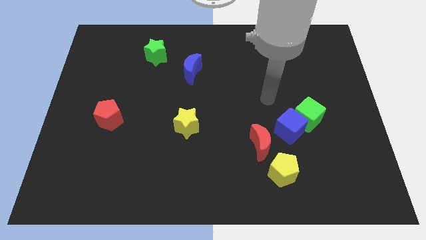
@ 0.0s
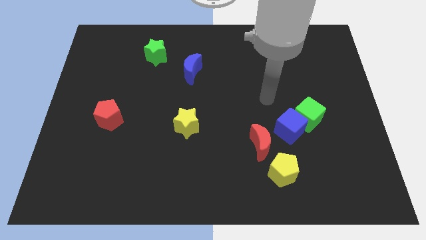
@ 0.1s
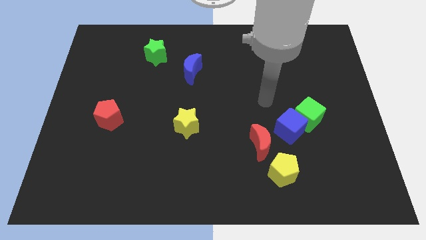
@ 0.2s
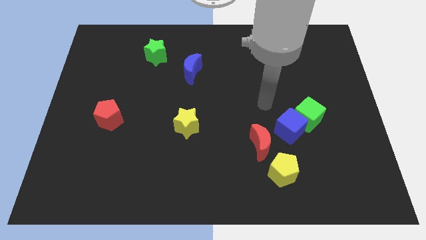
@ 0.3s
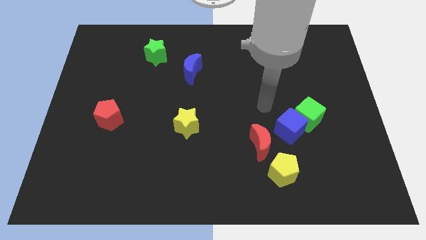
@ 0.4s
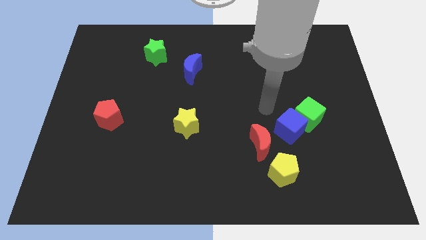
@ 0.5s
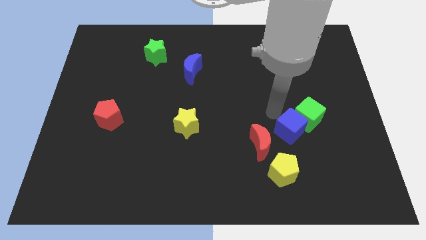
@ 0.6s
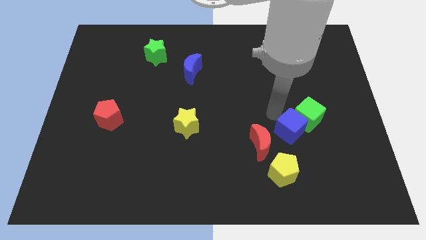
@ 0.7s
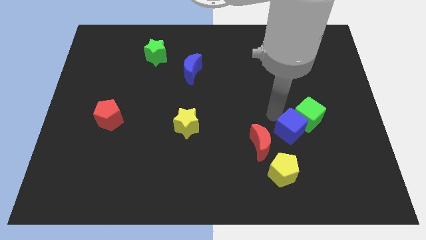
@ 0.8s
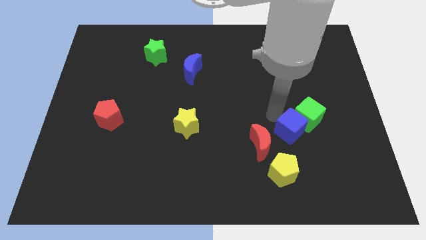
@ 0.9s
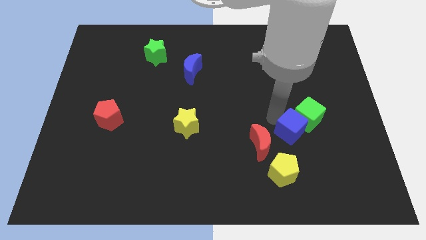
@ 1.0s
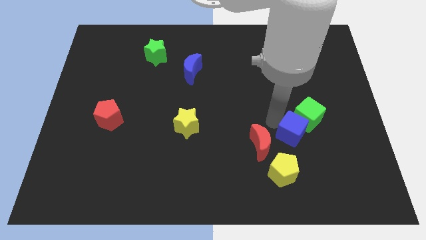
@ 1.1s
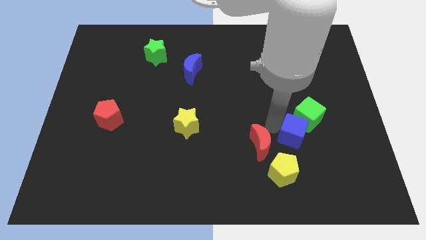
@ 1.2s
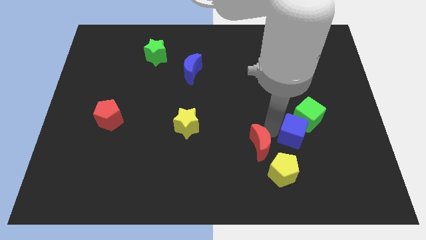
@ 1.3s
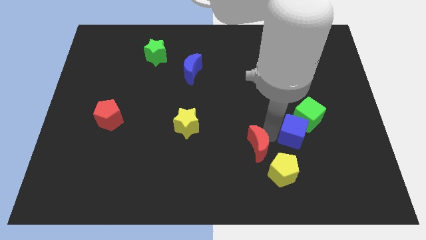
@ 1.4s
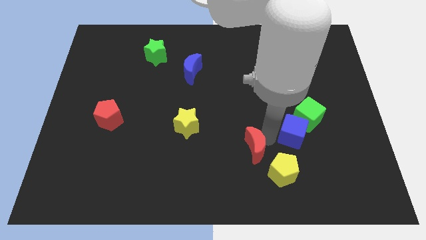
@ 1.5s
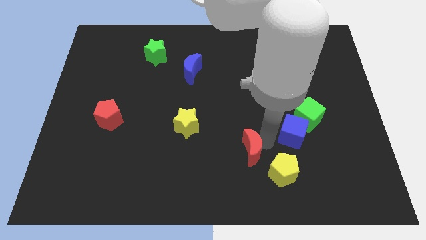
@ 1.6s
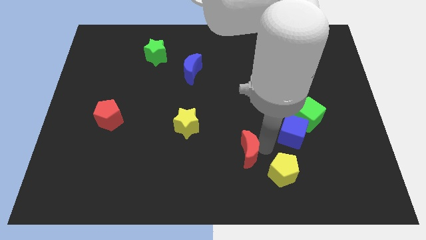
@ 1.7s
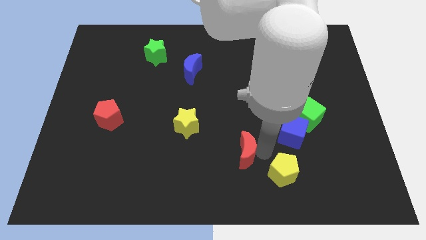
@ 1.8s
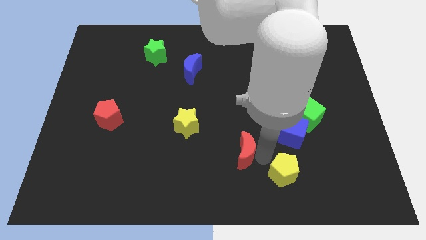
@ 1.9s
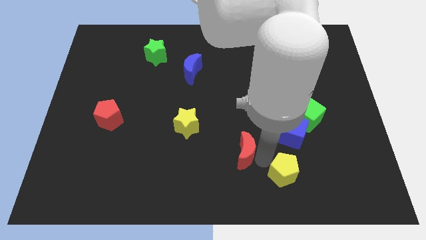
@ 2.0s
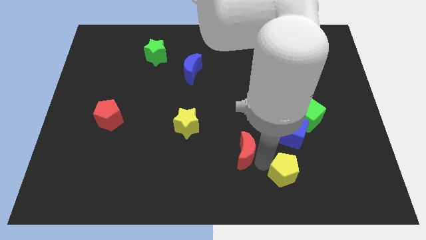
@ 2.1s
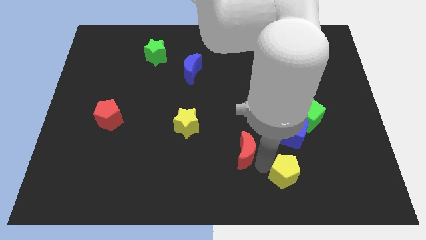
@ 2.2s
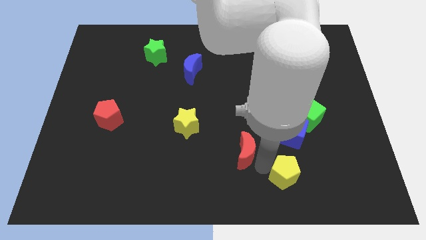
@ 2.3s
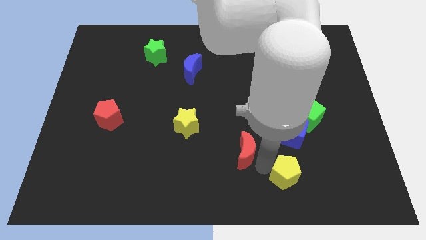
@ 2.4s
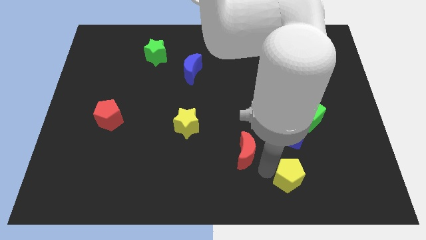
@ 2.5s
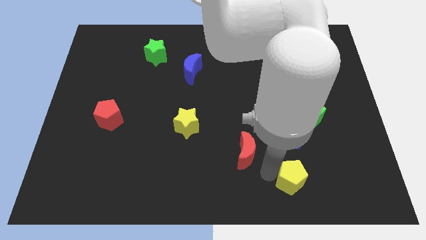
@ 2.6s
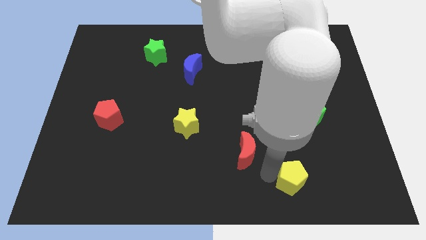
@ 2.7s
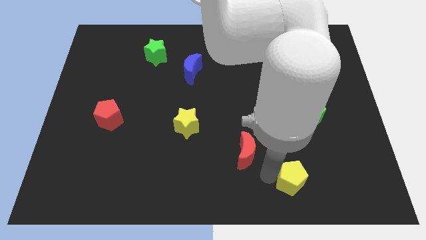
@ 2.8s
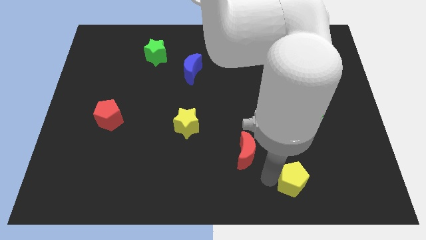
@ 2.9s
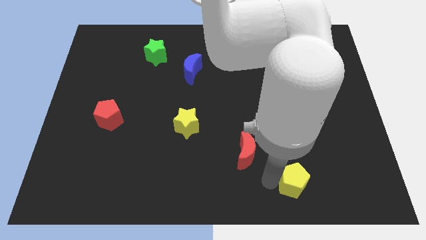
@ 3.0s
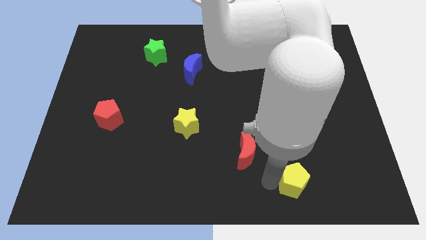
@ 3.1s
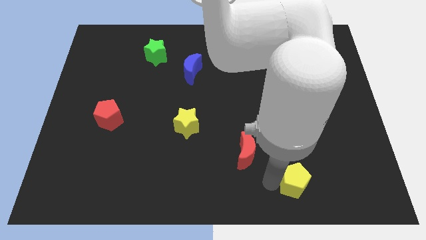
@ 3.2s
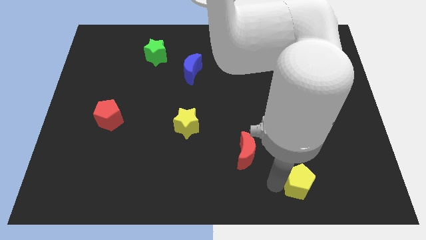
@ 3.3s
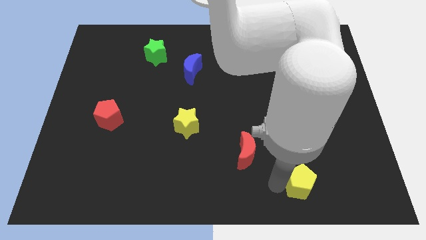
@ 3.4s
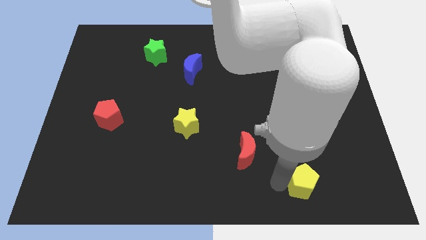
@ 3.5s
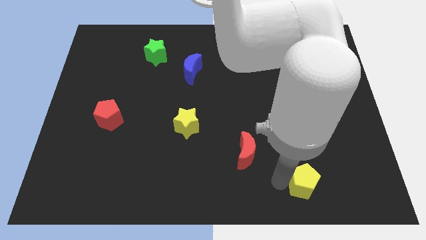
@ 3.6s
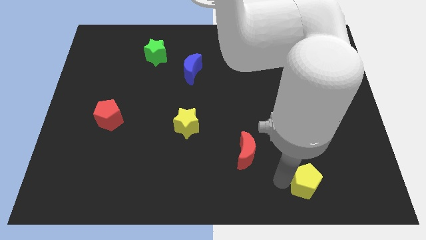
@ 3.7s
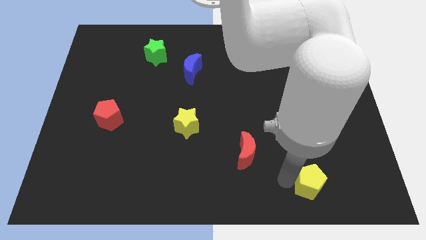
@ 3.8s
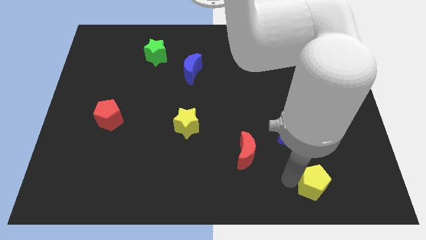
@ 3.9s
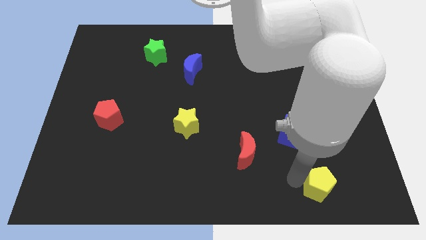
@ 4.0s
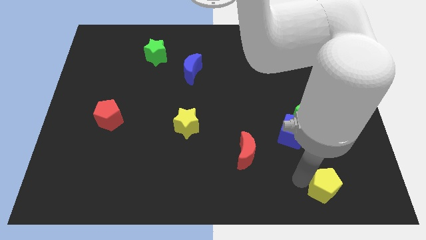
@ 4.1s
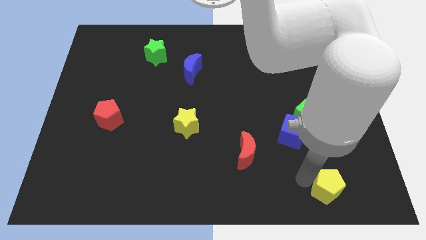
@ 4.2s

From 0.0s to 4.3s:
move the yellow pentagon towards the bottom right of the board

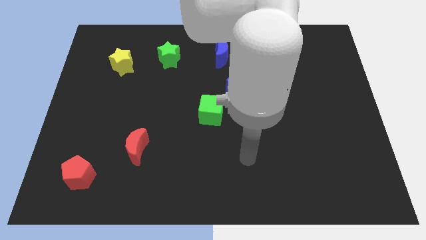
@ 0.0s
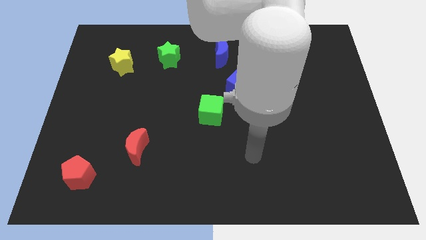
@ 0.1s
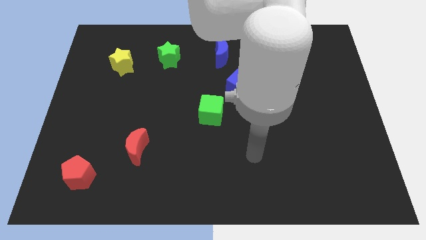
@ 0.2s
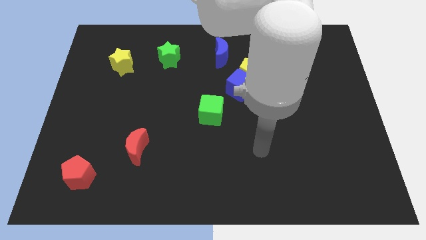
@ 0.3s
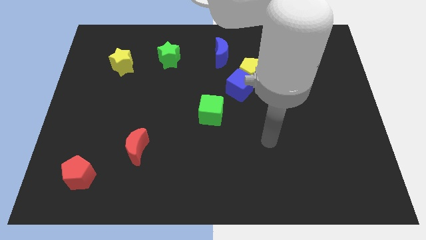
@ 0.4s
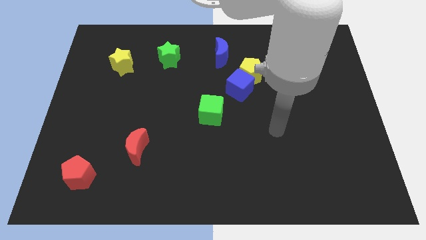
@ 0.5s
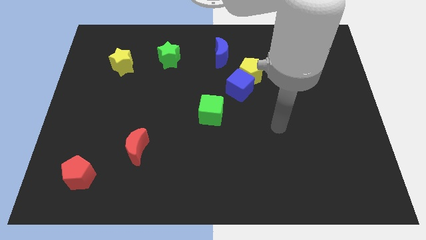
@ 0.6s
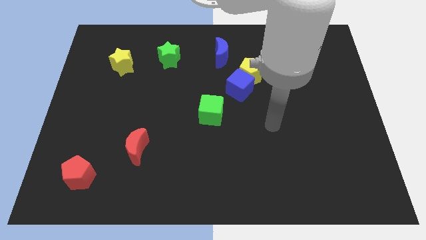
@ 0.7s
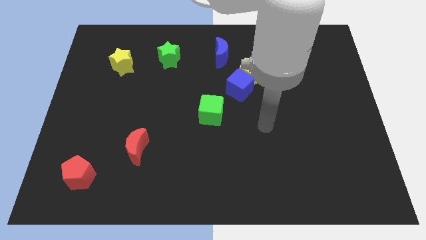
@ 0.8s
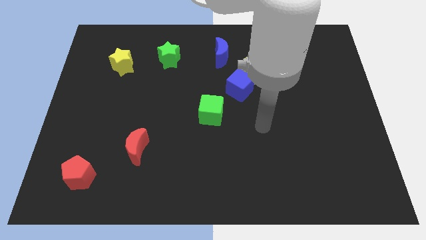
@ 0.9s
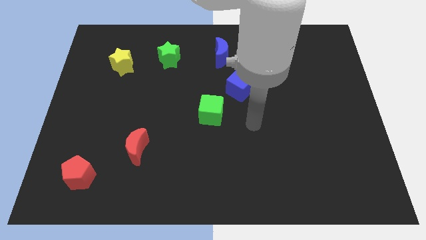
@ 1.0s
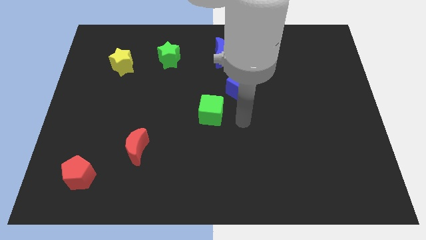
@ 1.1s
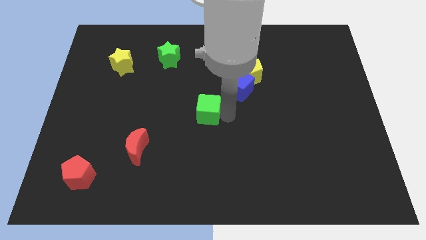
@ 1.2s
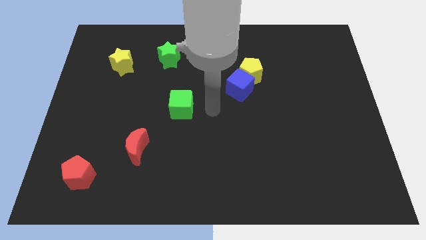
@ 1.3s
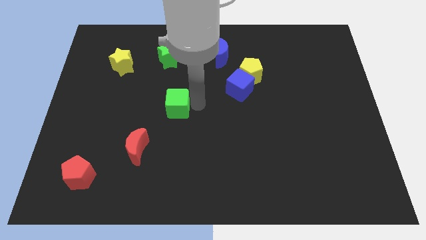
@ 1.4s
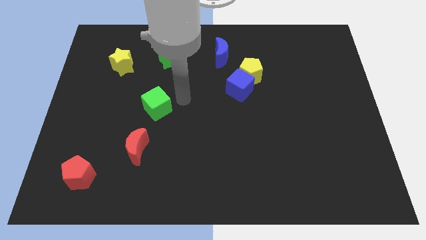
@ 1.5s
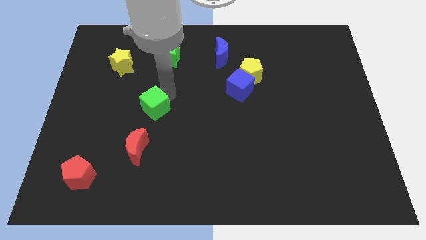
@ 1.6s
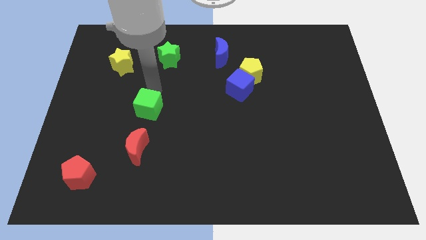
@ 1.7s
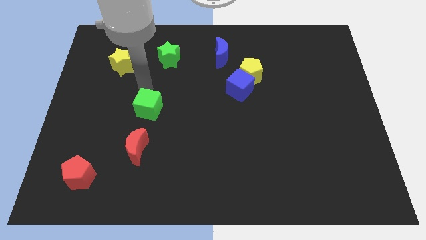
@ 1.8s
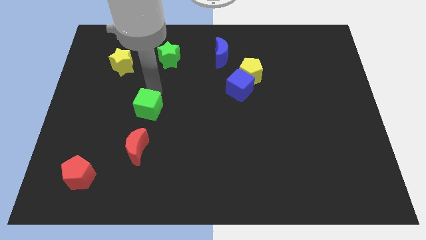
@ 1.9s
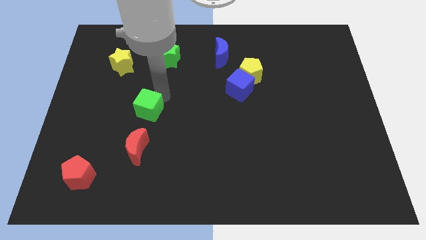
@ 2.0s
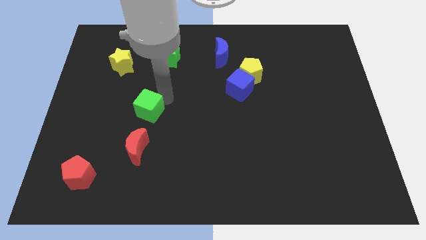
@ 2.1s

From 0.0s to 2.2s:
move the green cube towards the left side

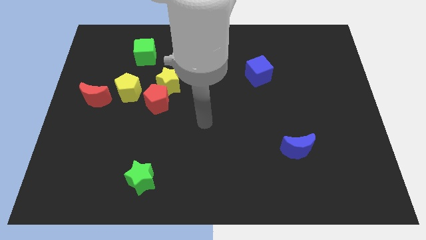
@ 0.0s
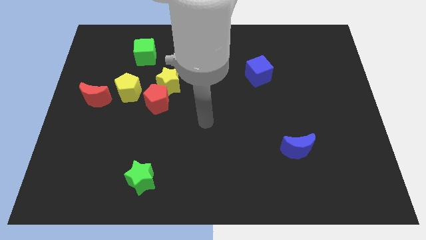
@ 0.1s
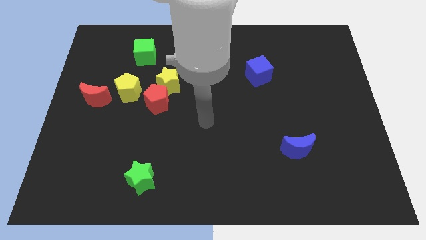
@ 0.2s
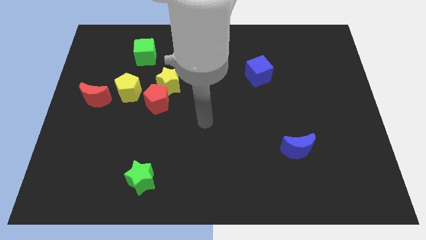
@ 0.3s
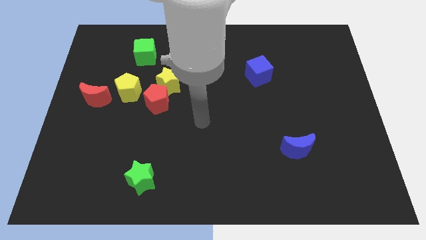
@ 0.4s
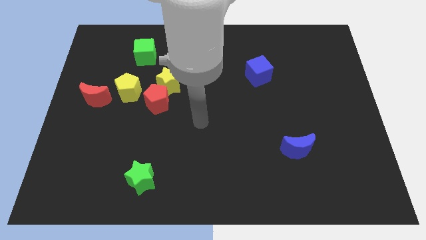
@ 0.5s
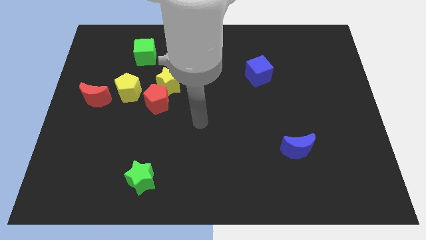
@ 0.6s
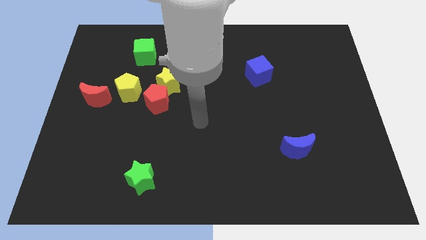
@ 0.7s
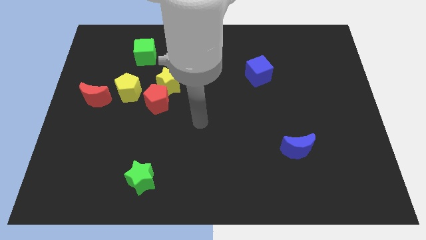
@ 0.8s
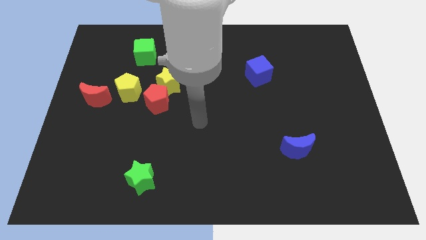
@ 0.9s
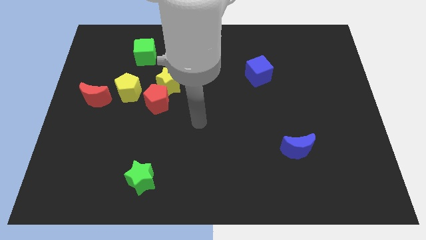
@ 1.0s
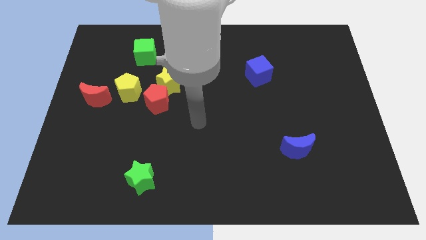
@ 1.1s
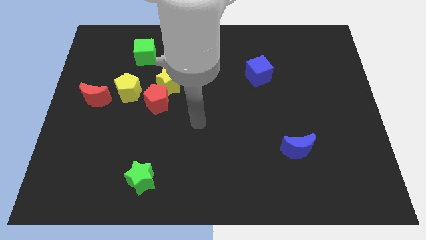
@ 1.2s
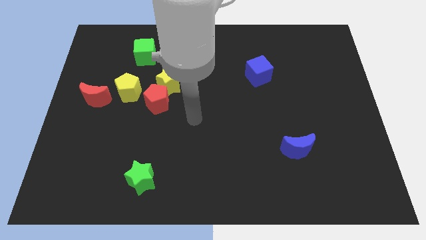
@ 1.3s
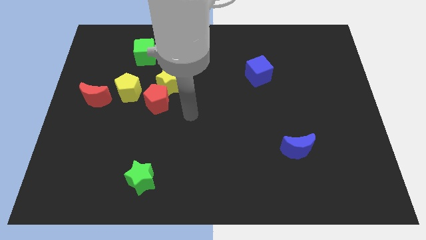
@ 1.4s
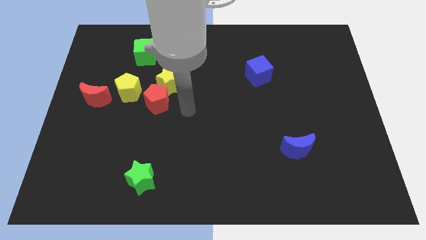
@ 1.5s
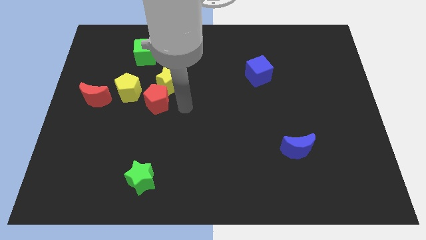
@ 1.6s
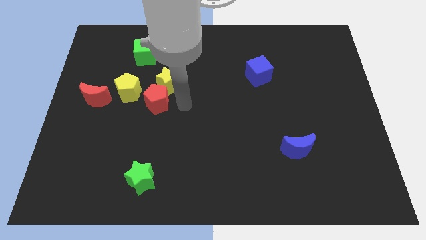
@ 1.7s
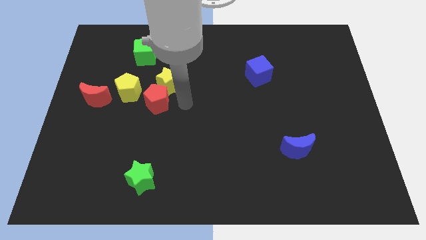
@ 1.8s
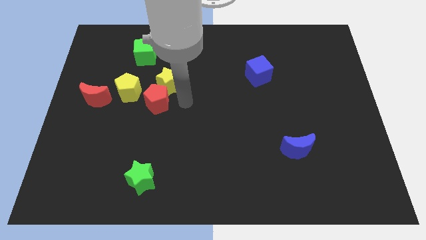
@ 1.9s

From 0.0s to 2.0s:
move your arm to the right side of the red pentagon

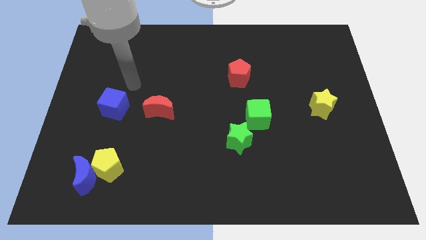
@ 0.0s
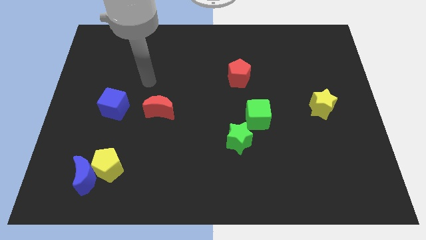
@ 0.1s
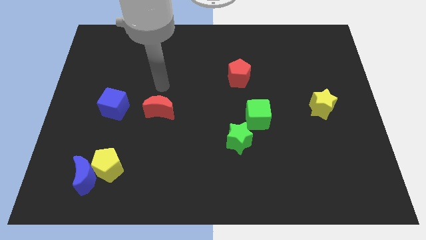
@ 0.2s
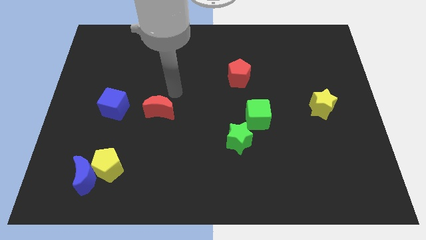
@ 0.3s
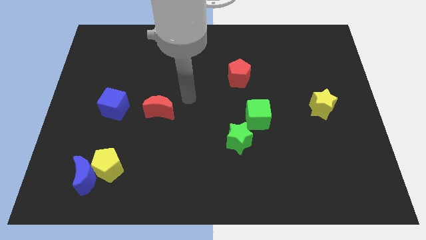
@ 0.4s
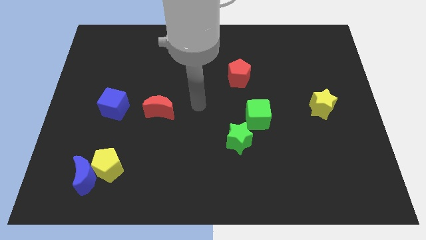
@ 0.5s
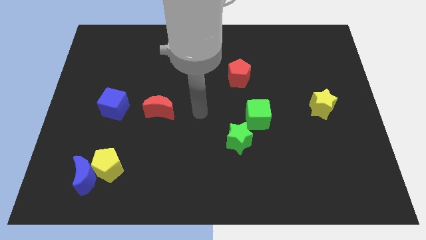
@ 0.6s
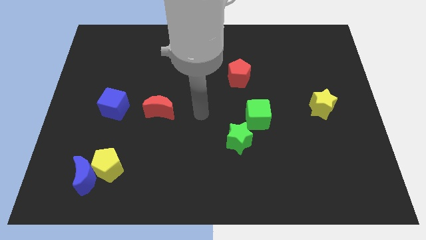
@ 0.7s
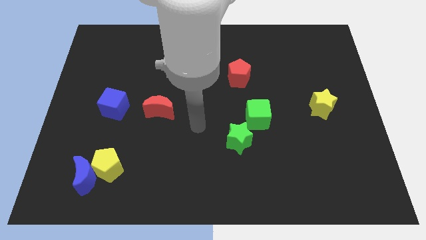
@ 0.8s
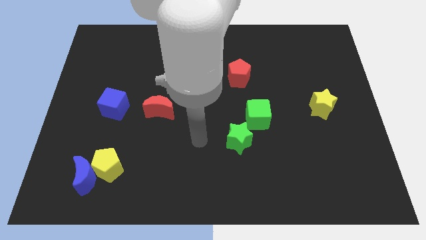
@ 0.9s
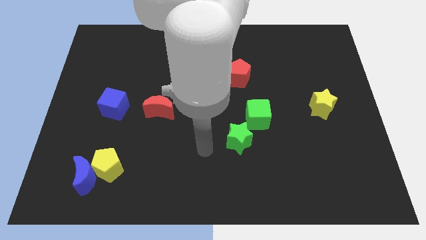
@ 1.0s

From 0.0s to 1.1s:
slide your arm to the left of green star
